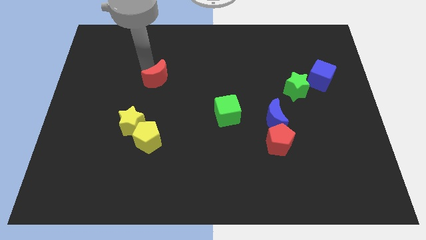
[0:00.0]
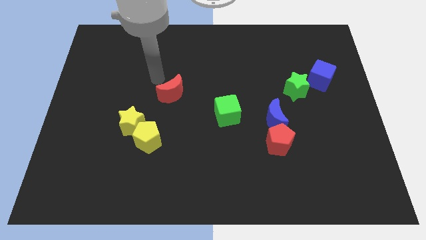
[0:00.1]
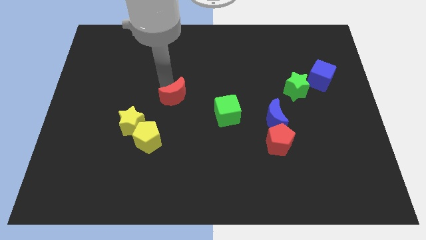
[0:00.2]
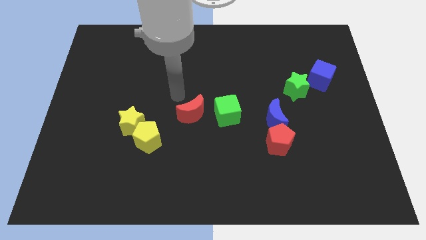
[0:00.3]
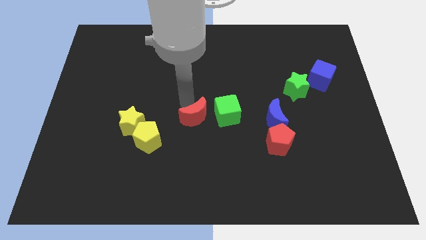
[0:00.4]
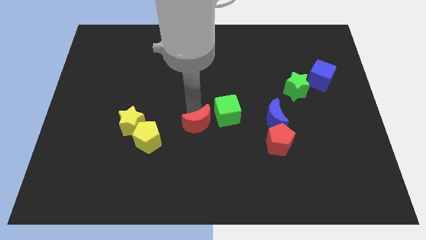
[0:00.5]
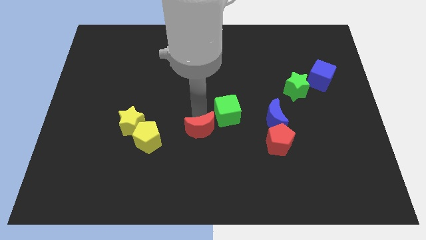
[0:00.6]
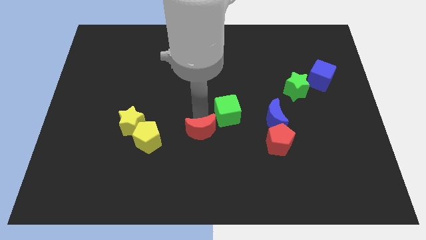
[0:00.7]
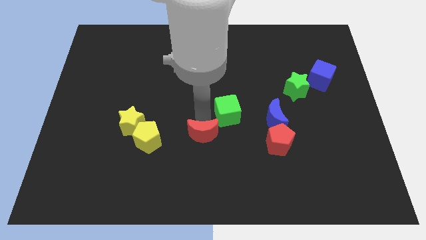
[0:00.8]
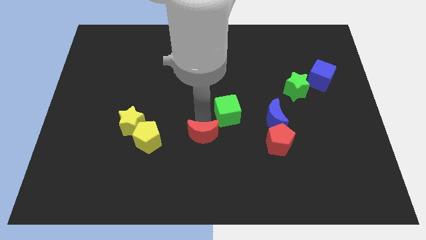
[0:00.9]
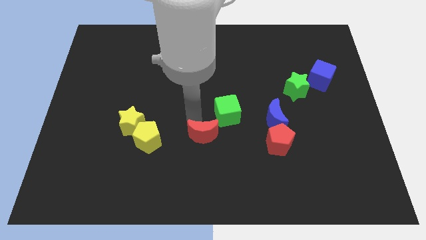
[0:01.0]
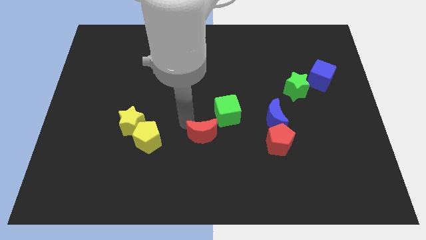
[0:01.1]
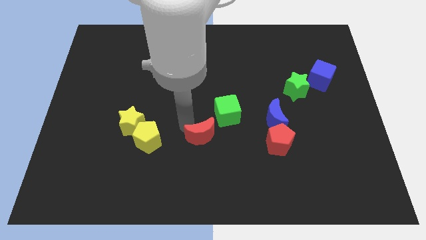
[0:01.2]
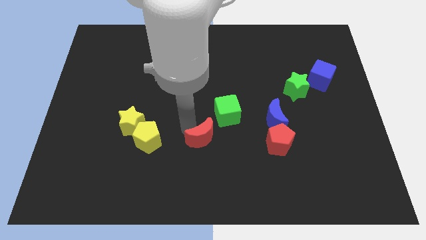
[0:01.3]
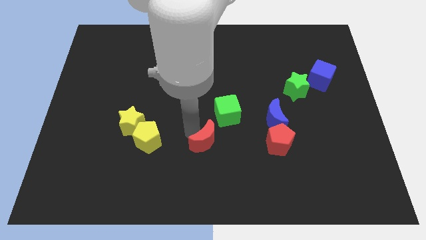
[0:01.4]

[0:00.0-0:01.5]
place the red moon to the right of the yellow pentagon

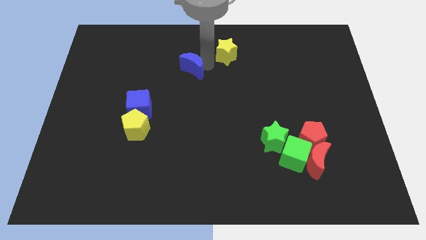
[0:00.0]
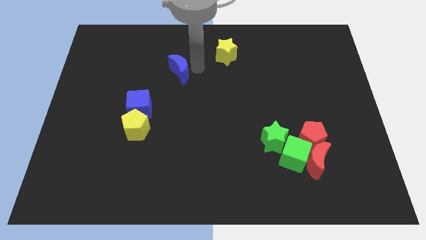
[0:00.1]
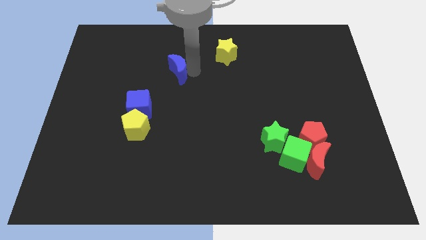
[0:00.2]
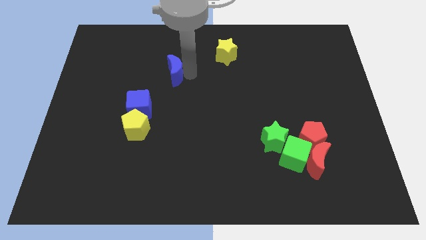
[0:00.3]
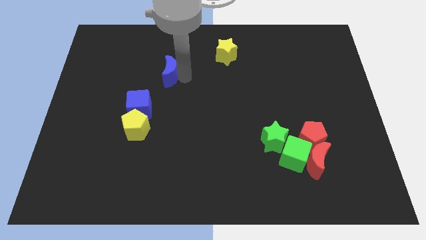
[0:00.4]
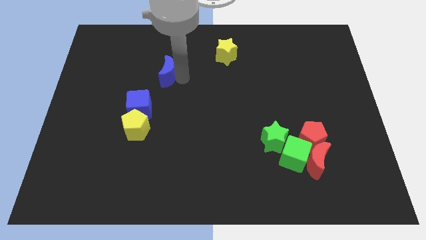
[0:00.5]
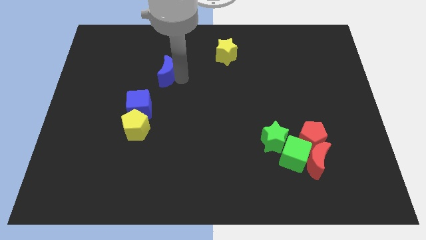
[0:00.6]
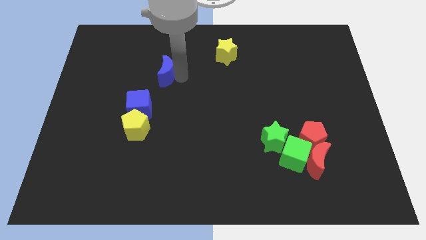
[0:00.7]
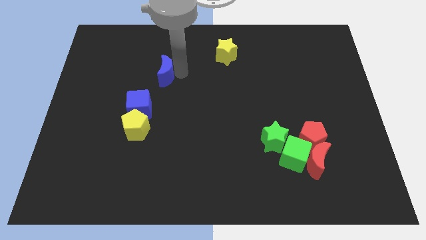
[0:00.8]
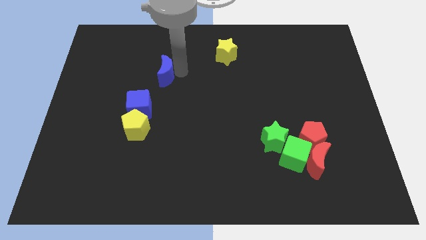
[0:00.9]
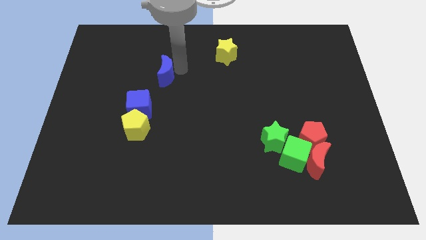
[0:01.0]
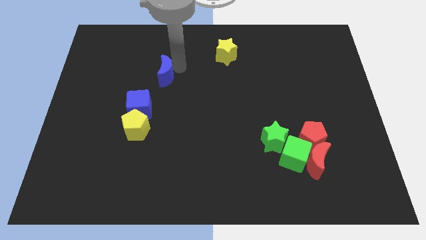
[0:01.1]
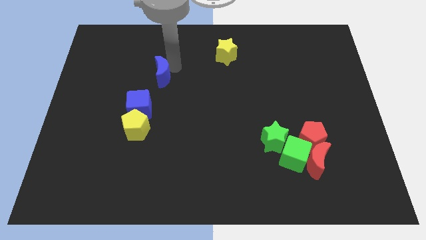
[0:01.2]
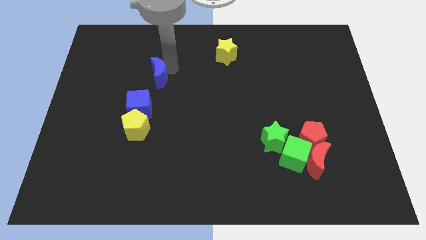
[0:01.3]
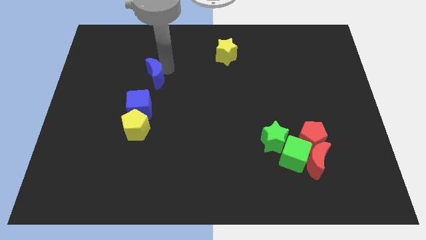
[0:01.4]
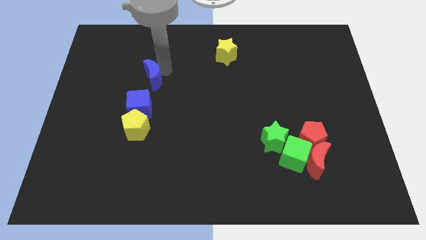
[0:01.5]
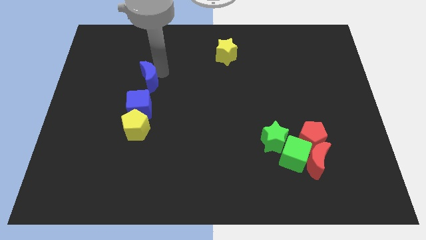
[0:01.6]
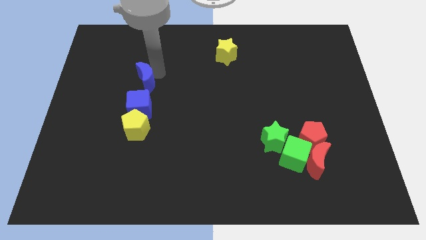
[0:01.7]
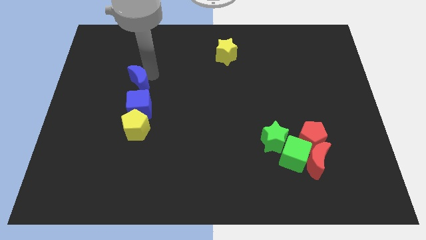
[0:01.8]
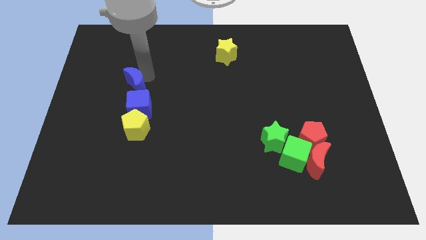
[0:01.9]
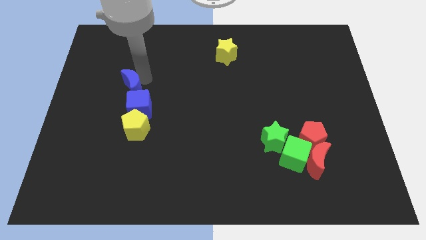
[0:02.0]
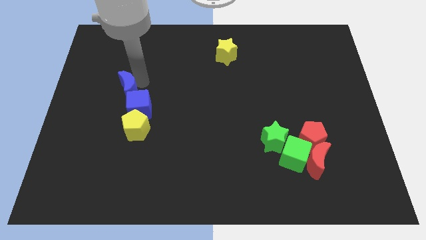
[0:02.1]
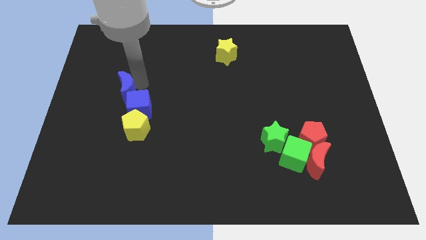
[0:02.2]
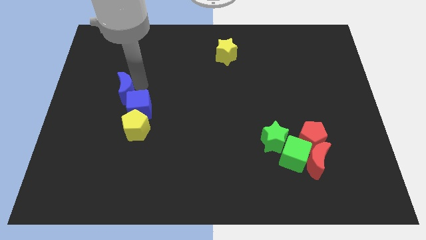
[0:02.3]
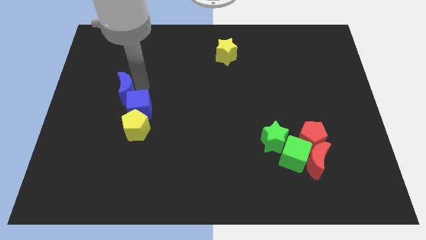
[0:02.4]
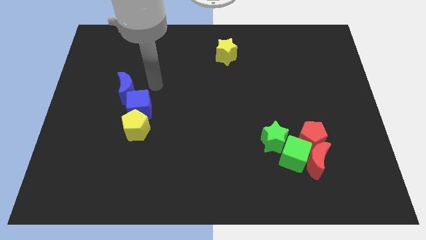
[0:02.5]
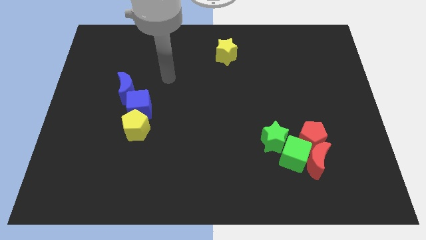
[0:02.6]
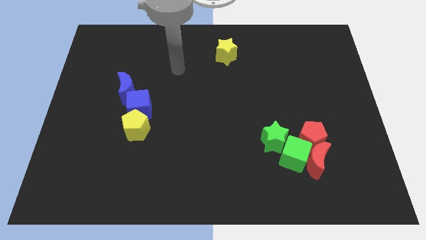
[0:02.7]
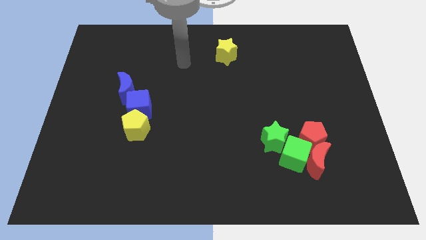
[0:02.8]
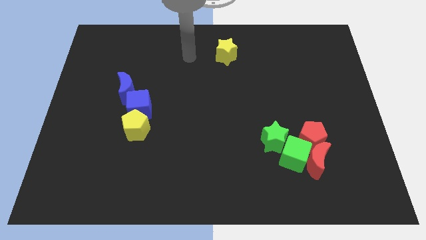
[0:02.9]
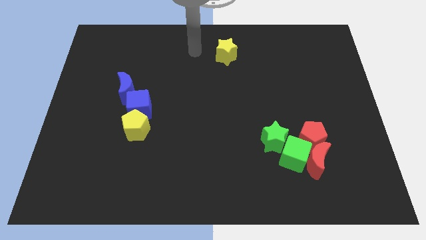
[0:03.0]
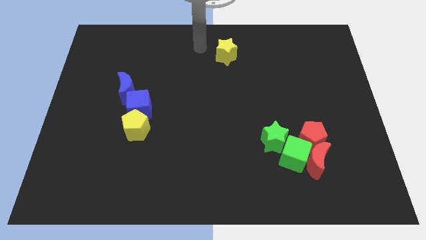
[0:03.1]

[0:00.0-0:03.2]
push the blue moon to the top left of the blue cube and go away

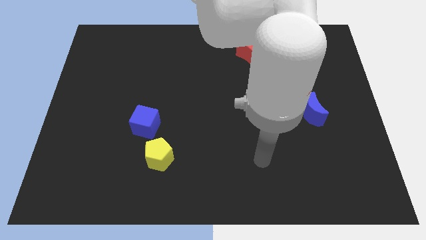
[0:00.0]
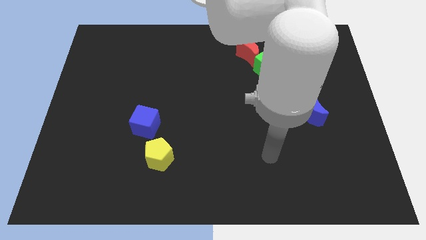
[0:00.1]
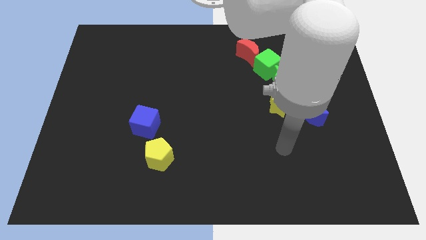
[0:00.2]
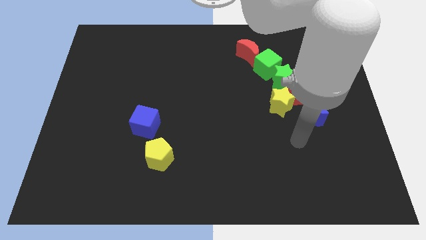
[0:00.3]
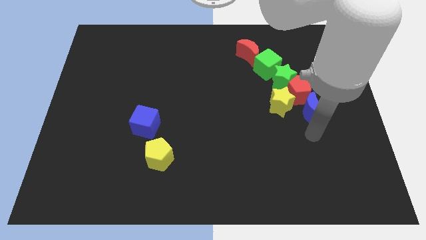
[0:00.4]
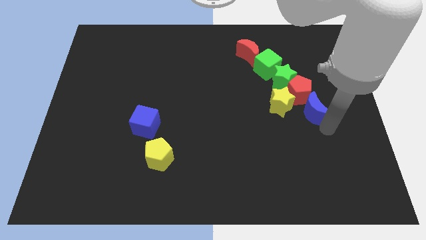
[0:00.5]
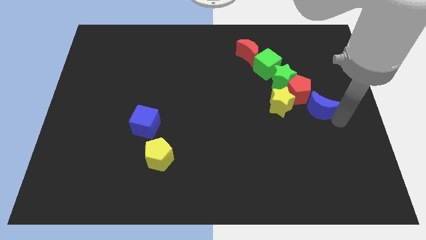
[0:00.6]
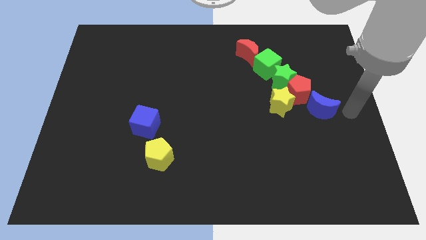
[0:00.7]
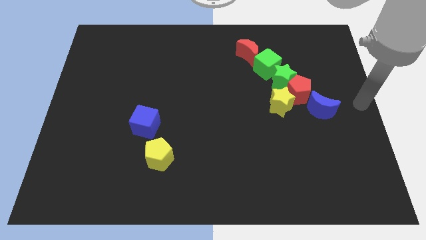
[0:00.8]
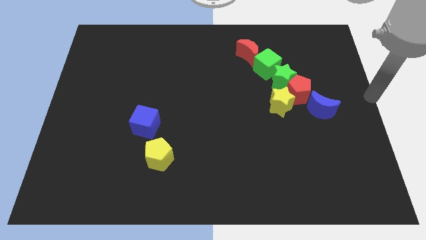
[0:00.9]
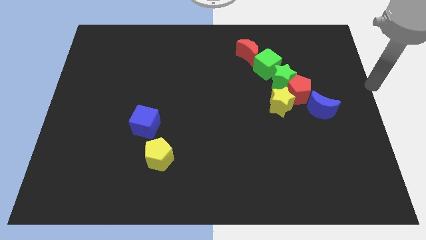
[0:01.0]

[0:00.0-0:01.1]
slightly push the blue crescent towards the right

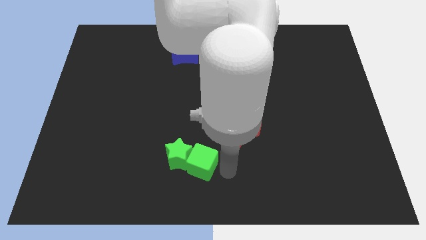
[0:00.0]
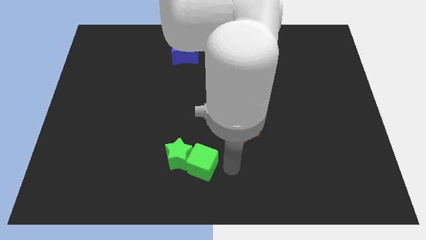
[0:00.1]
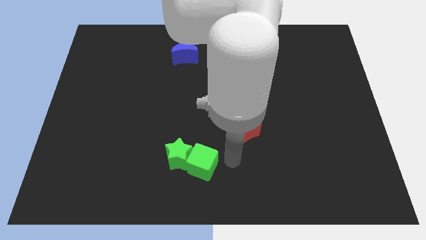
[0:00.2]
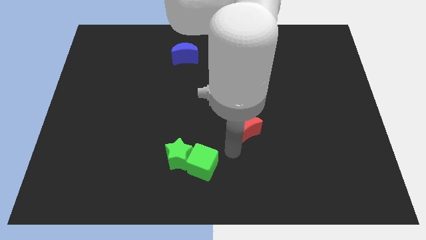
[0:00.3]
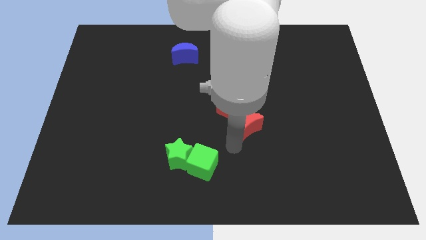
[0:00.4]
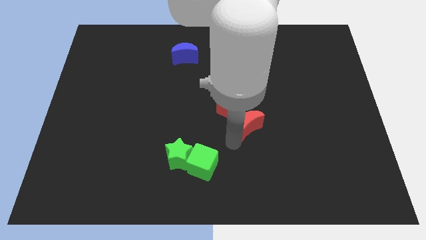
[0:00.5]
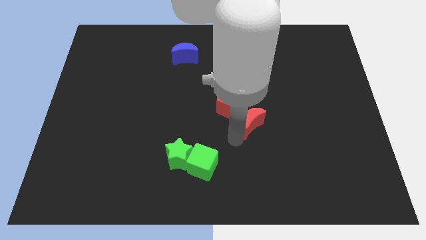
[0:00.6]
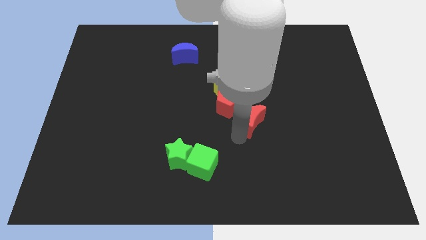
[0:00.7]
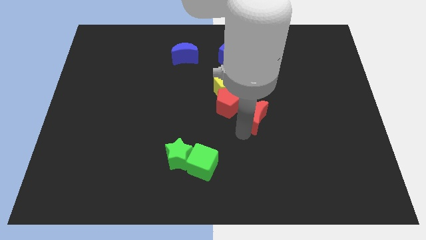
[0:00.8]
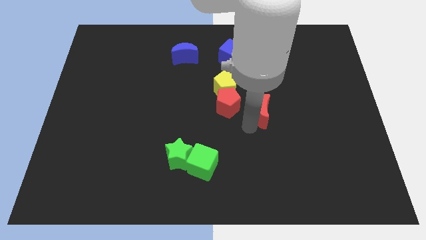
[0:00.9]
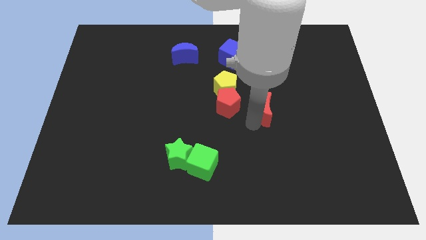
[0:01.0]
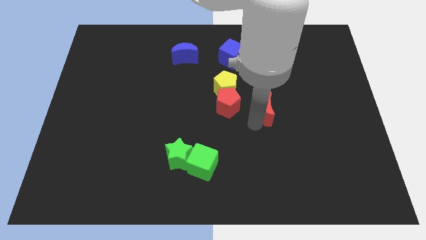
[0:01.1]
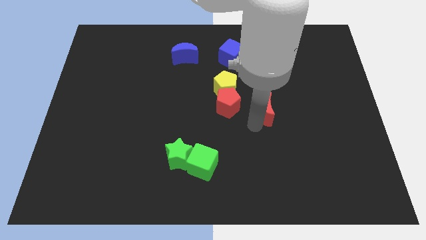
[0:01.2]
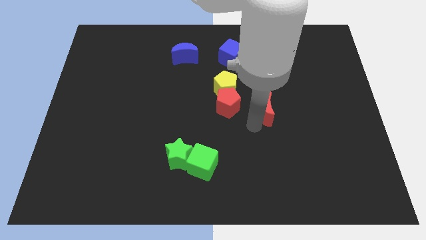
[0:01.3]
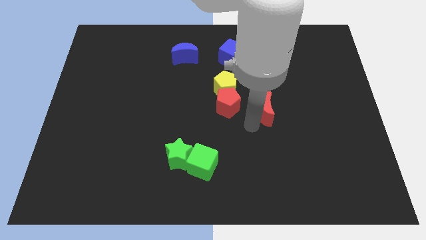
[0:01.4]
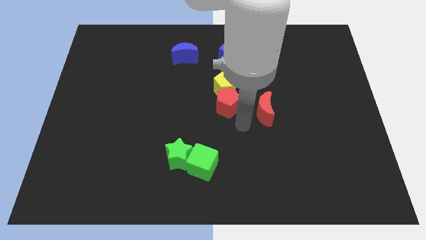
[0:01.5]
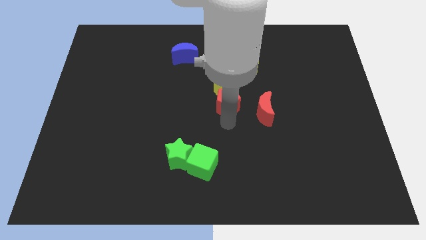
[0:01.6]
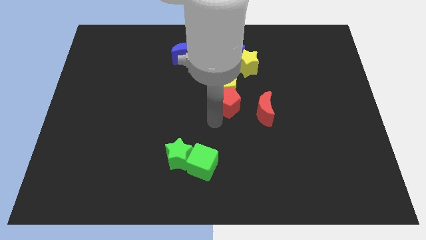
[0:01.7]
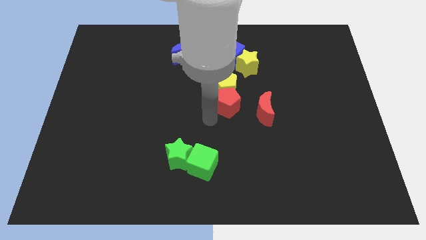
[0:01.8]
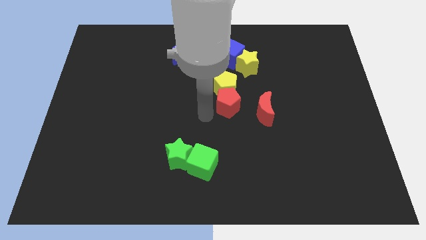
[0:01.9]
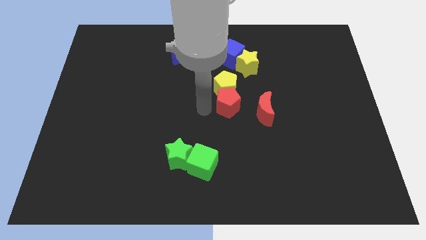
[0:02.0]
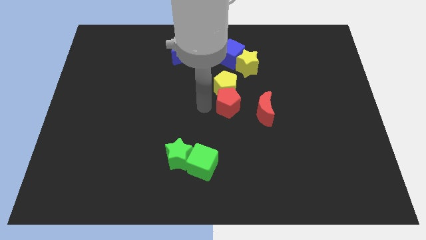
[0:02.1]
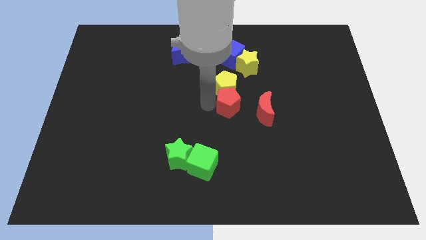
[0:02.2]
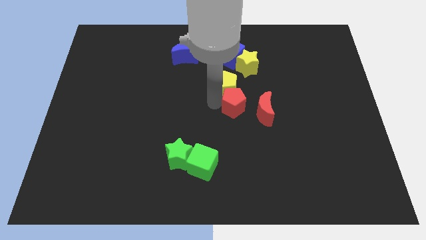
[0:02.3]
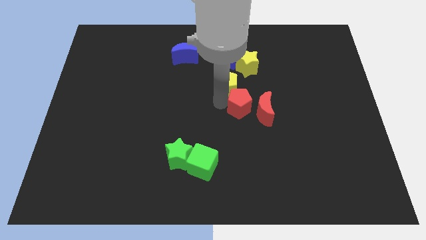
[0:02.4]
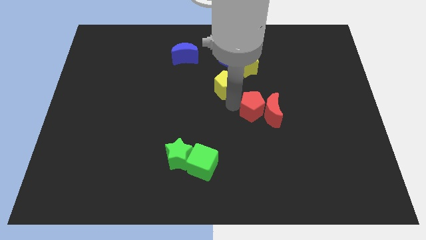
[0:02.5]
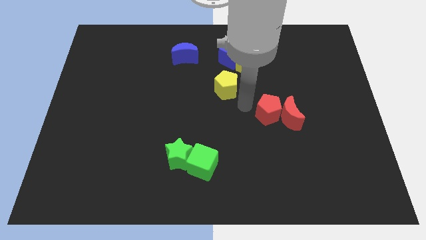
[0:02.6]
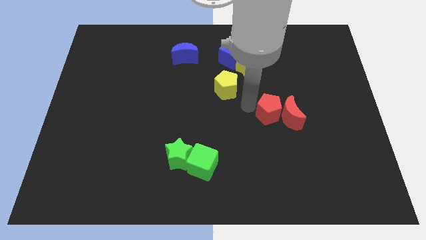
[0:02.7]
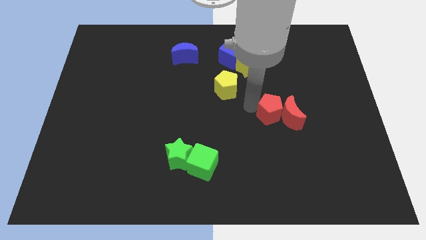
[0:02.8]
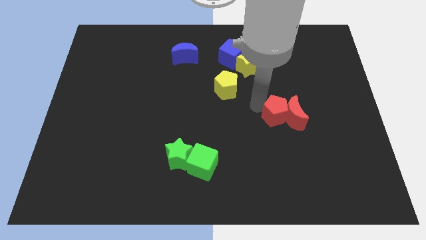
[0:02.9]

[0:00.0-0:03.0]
move the red pentagon along with red crescent diagonally right to the yellow pentagon

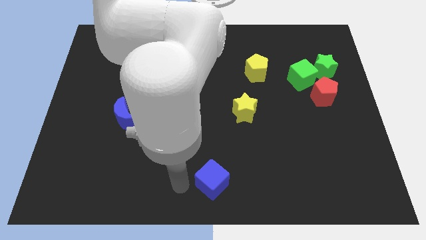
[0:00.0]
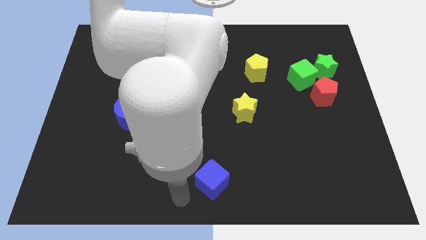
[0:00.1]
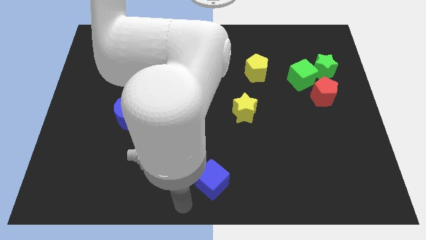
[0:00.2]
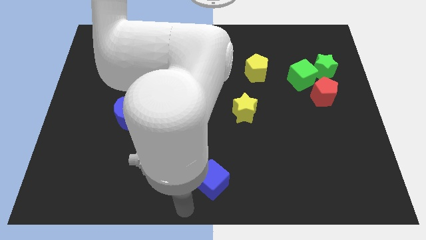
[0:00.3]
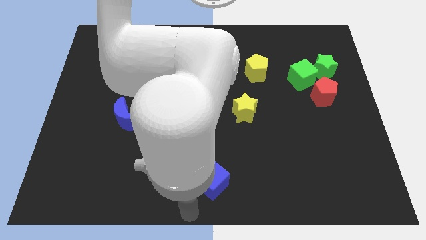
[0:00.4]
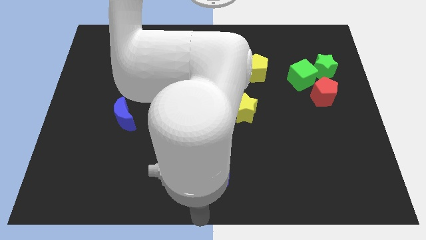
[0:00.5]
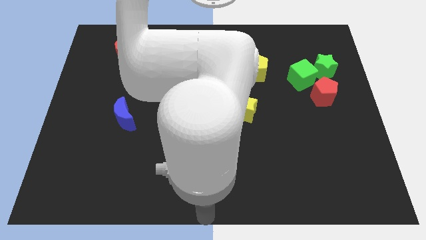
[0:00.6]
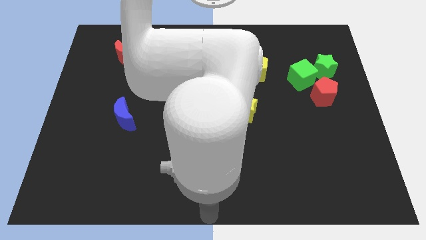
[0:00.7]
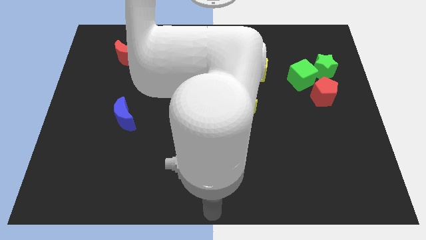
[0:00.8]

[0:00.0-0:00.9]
place your arm at the bottom center of the board
